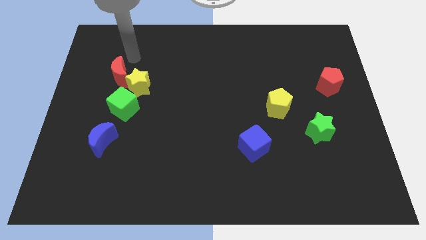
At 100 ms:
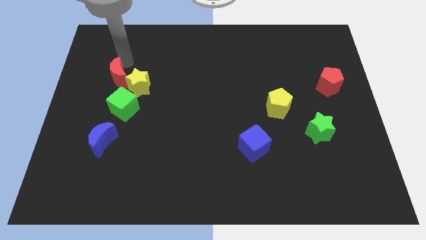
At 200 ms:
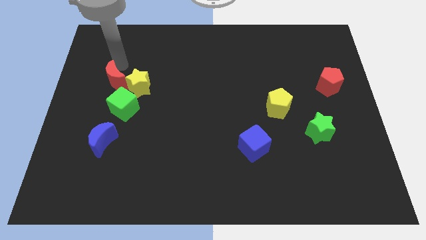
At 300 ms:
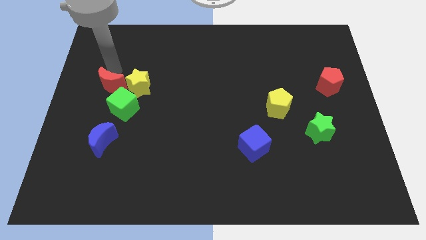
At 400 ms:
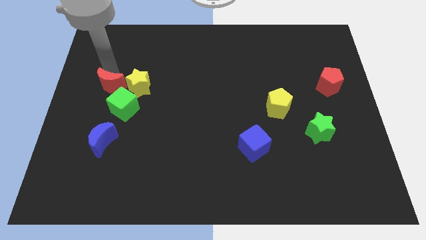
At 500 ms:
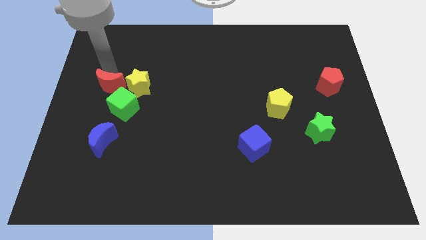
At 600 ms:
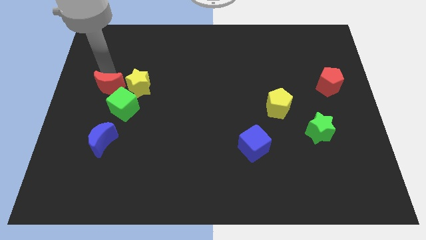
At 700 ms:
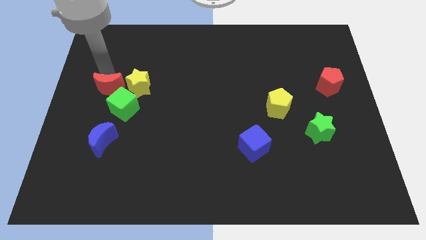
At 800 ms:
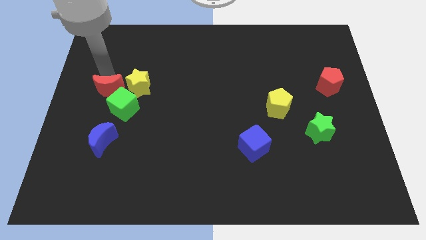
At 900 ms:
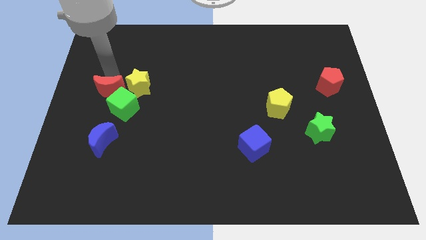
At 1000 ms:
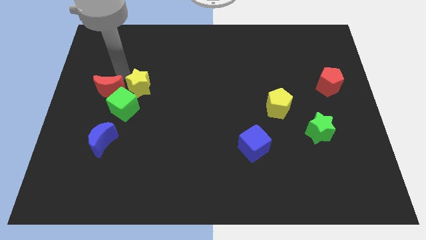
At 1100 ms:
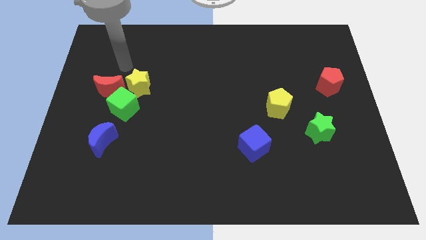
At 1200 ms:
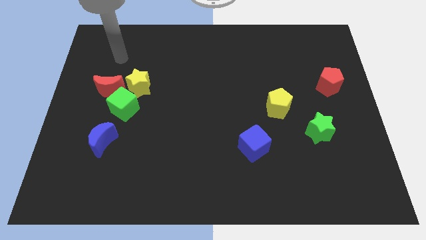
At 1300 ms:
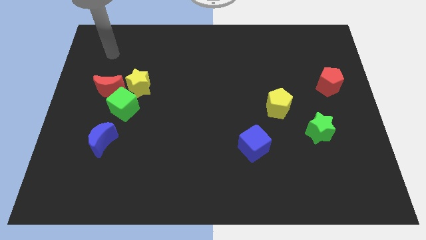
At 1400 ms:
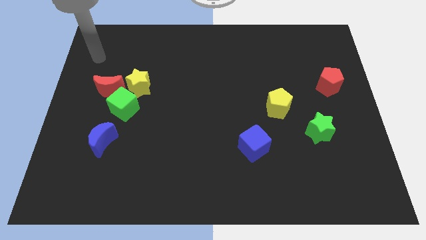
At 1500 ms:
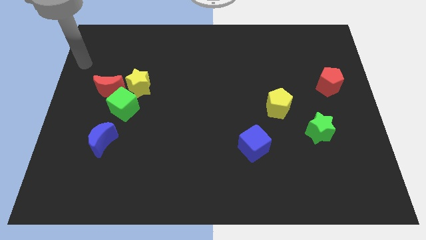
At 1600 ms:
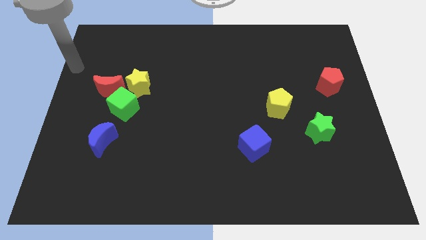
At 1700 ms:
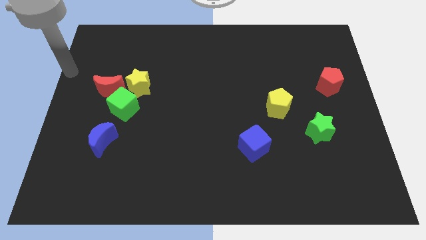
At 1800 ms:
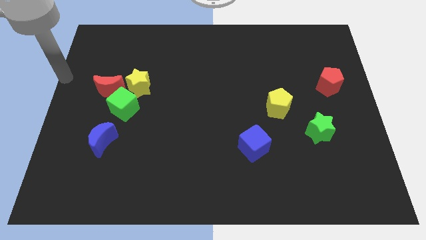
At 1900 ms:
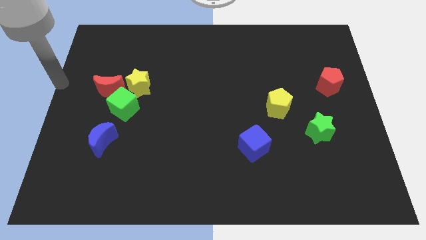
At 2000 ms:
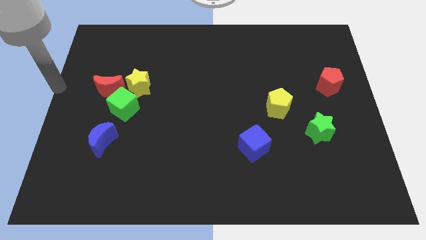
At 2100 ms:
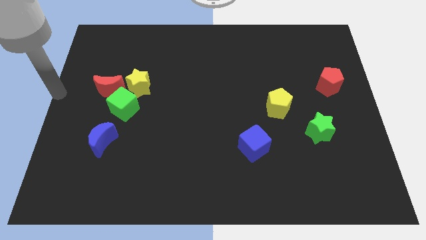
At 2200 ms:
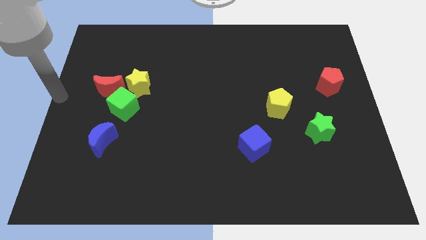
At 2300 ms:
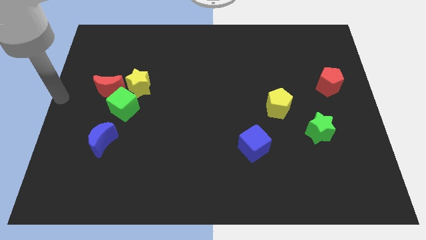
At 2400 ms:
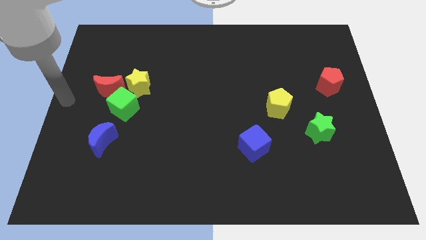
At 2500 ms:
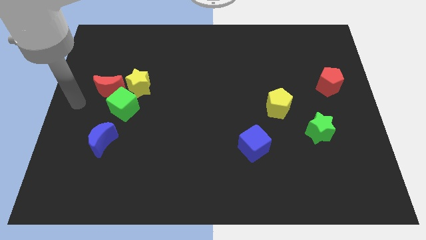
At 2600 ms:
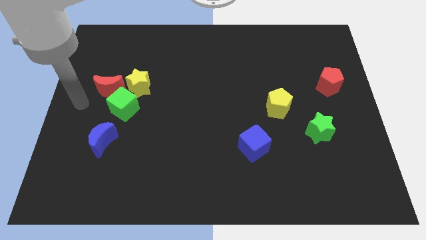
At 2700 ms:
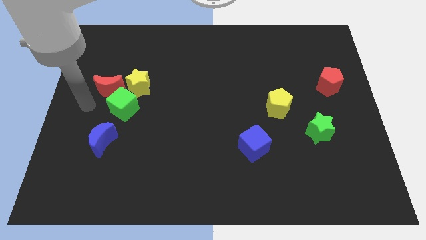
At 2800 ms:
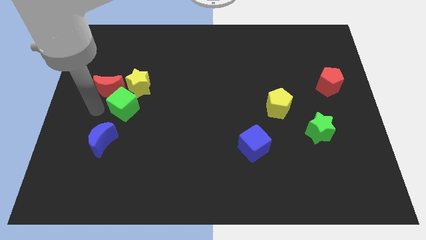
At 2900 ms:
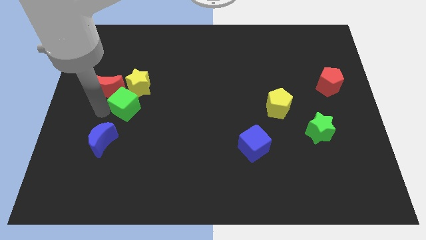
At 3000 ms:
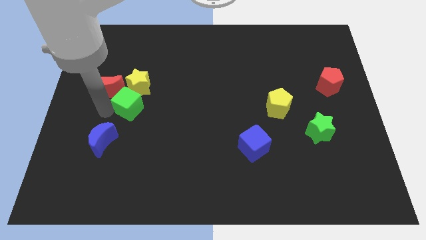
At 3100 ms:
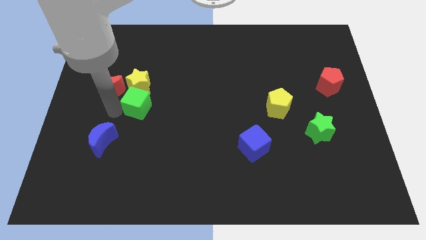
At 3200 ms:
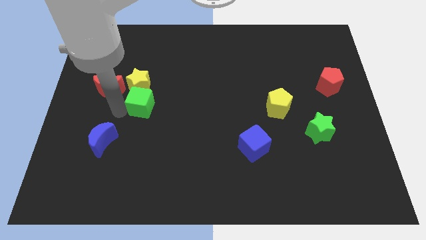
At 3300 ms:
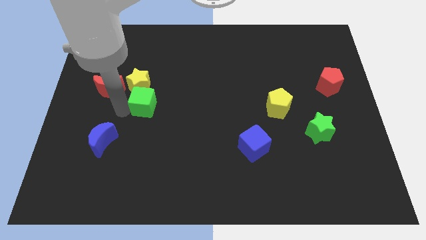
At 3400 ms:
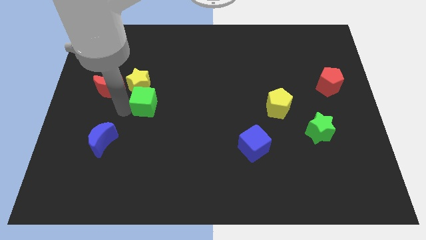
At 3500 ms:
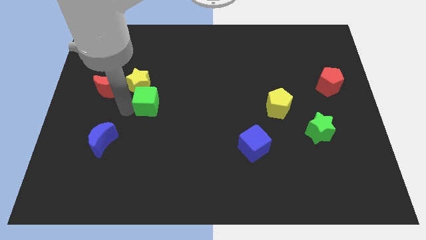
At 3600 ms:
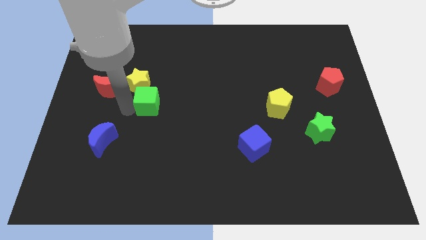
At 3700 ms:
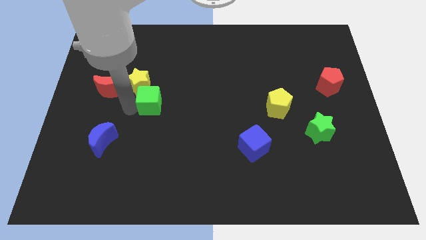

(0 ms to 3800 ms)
move green cube towards its right

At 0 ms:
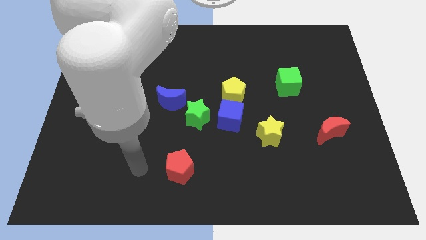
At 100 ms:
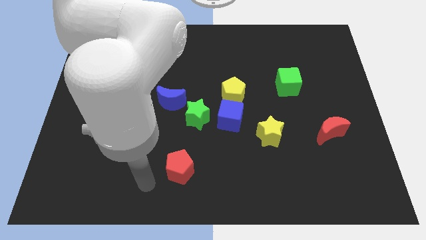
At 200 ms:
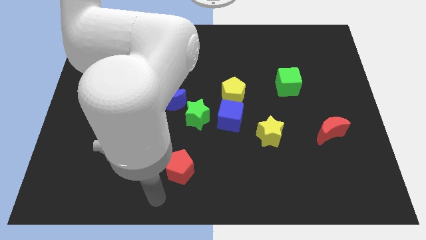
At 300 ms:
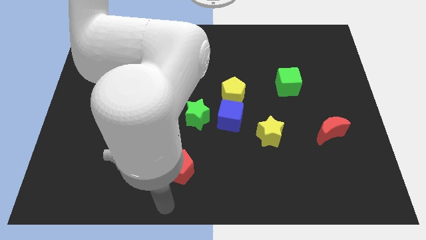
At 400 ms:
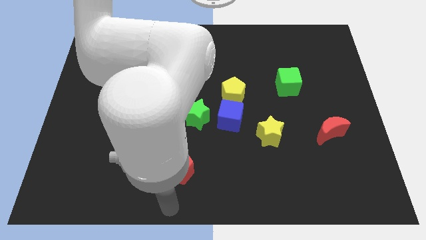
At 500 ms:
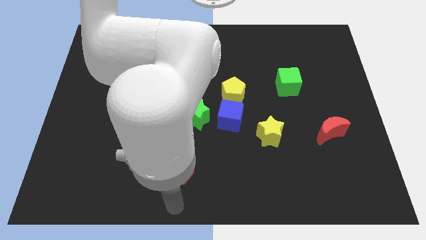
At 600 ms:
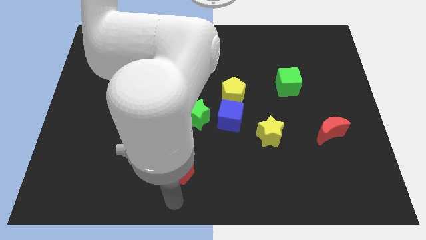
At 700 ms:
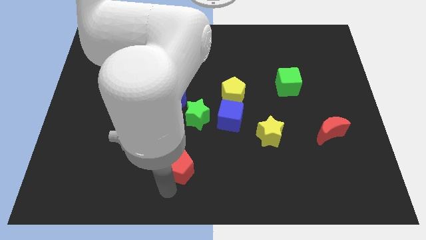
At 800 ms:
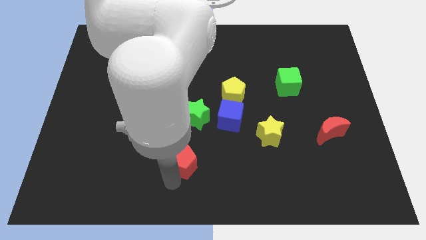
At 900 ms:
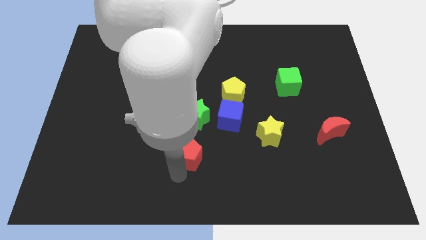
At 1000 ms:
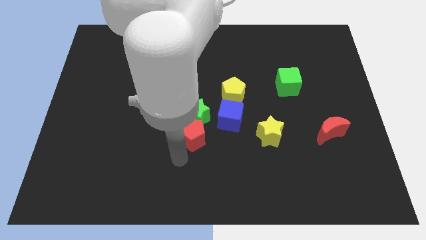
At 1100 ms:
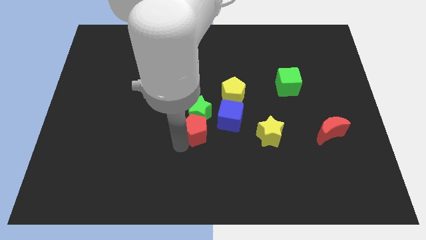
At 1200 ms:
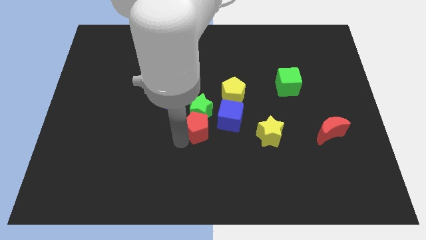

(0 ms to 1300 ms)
push the red pentagon into the bottom of the green star

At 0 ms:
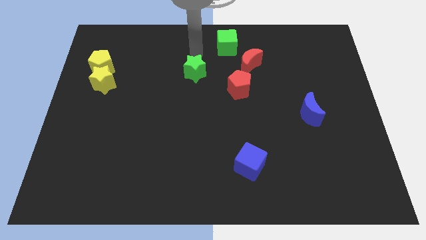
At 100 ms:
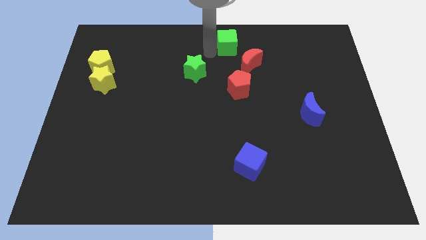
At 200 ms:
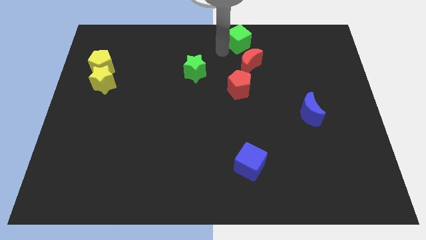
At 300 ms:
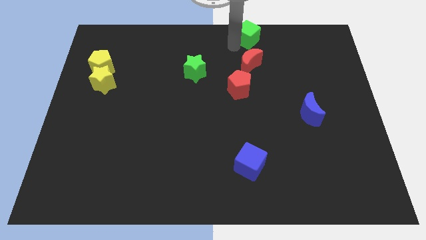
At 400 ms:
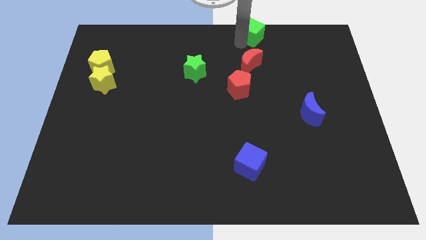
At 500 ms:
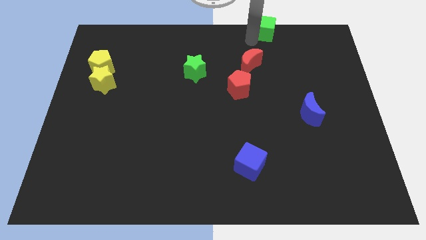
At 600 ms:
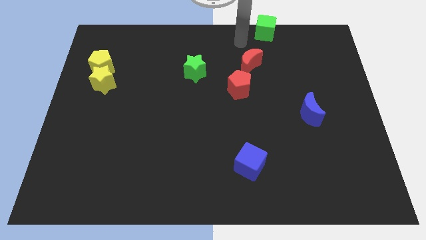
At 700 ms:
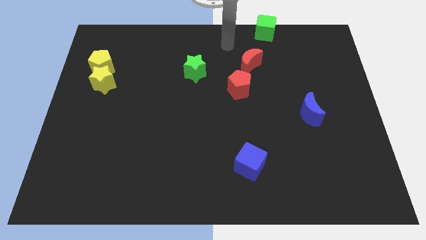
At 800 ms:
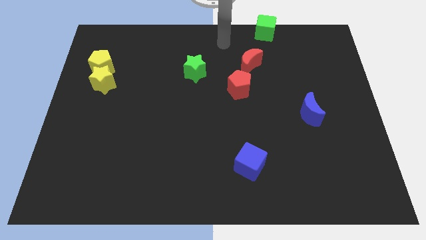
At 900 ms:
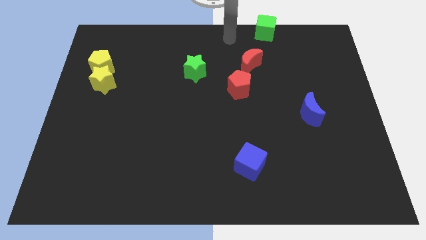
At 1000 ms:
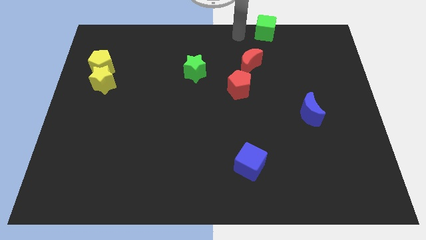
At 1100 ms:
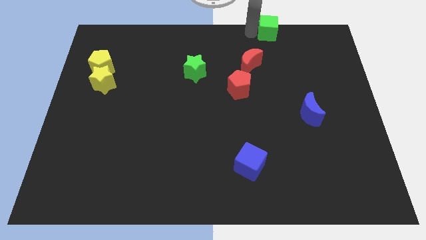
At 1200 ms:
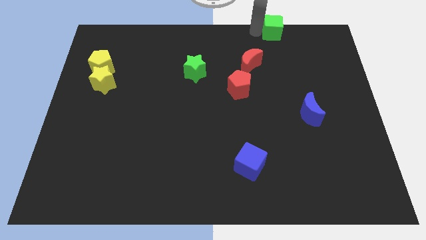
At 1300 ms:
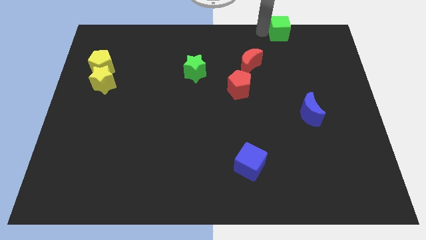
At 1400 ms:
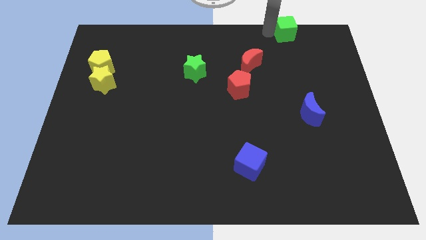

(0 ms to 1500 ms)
push the green cube to the top right of the red crescent

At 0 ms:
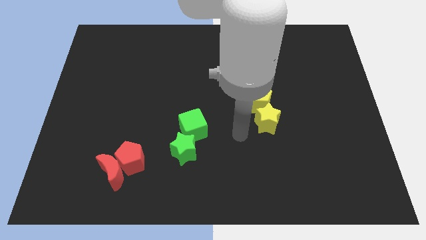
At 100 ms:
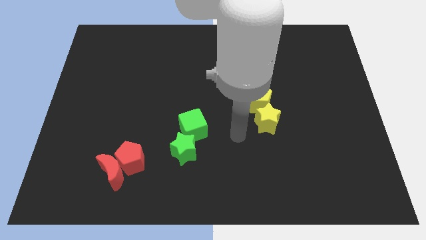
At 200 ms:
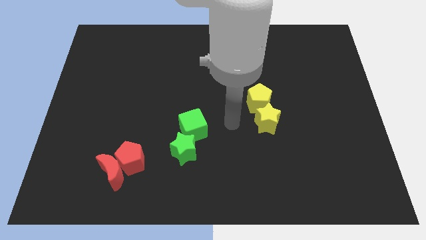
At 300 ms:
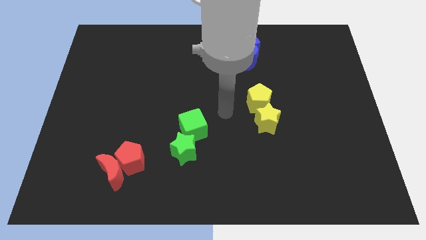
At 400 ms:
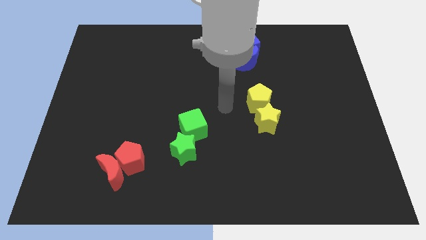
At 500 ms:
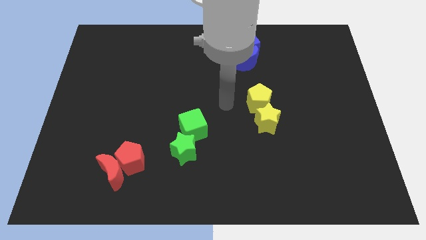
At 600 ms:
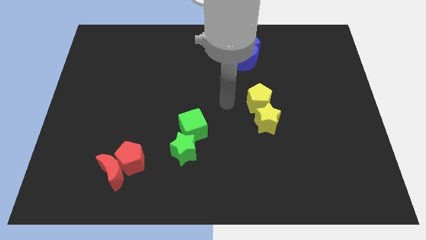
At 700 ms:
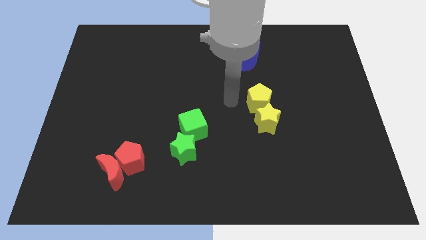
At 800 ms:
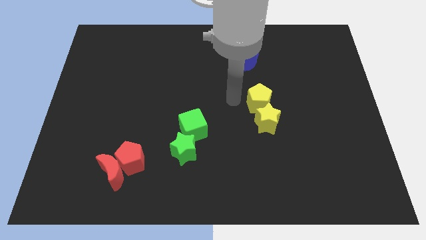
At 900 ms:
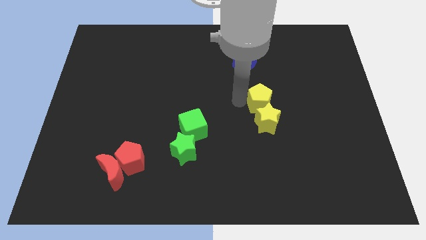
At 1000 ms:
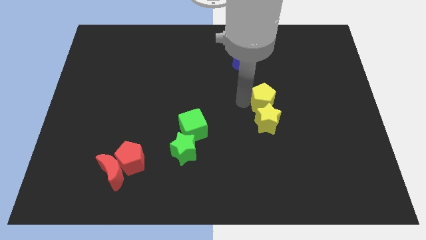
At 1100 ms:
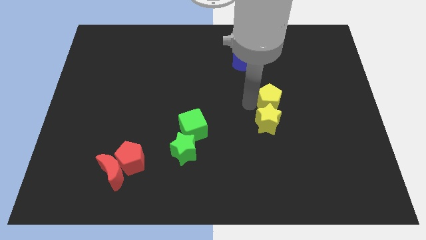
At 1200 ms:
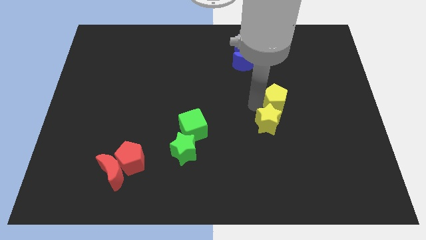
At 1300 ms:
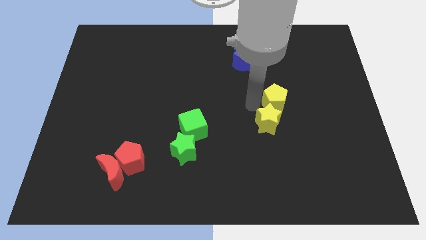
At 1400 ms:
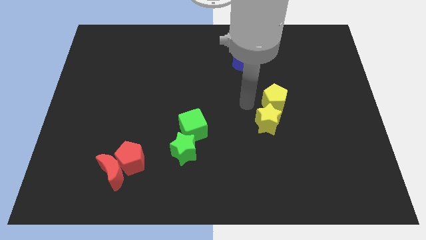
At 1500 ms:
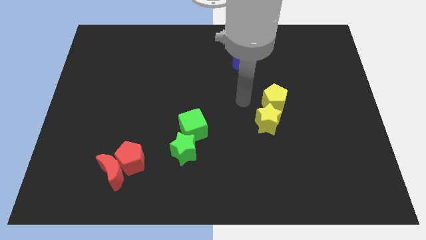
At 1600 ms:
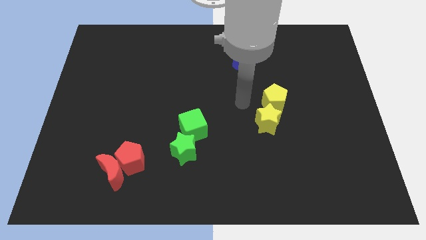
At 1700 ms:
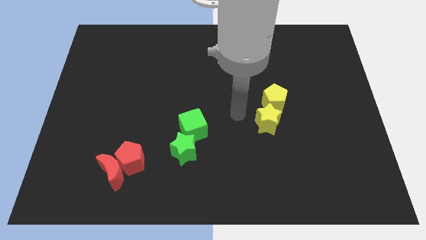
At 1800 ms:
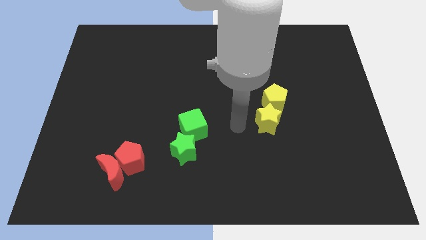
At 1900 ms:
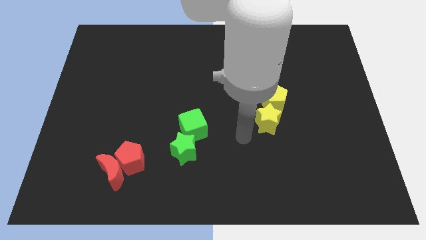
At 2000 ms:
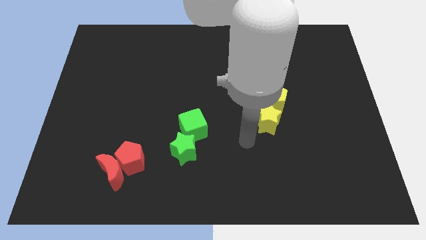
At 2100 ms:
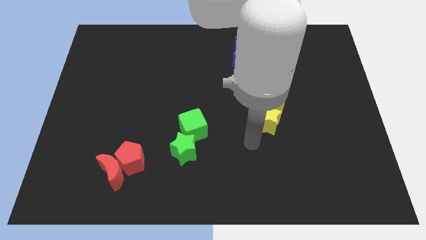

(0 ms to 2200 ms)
slightly push the yellow pentagon on top of the yellow star

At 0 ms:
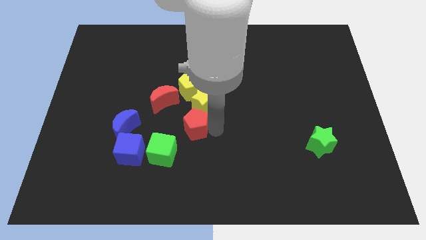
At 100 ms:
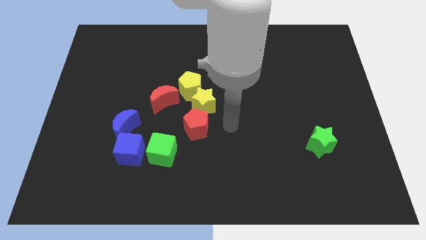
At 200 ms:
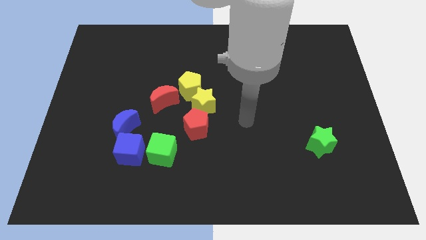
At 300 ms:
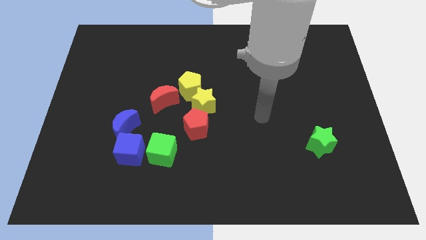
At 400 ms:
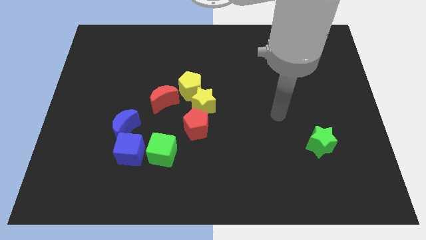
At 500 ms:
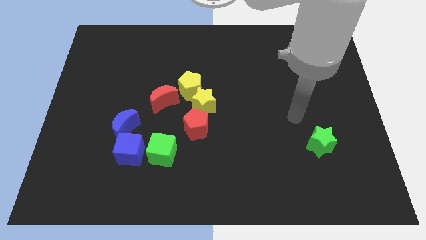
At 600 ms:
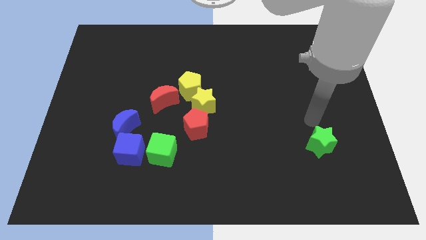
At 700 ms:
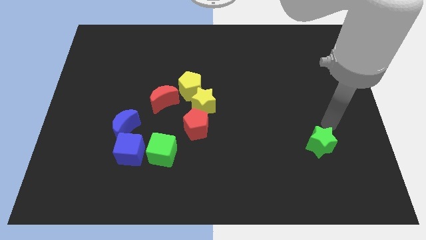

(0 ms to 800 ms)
move the arm towards the green star
